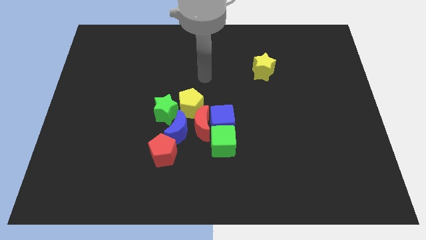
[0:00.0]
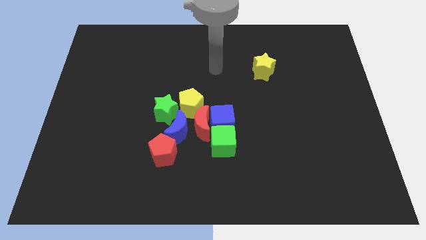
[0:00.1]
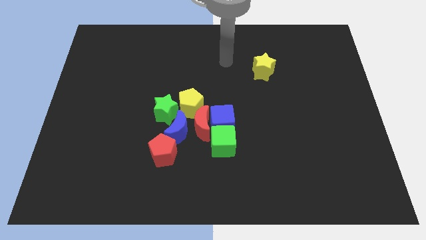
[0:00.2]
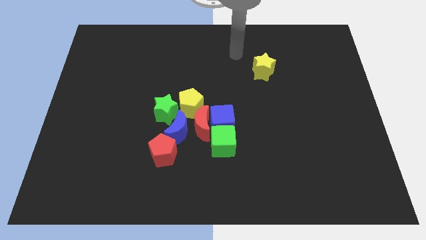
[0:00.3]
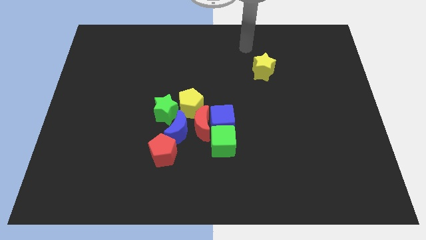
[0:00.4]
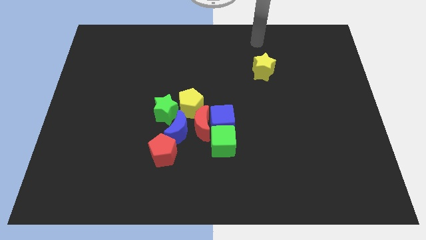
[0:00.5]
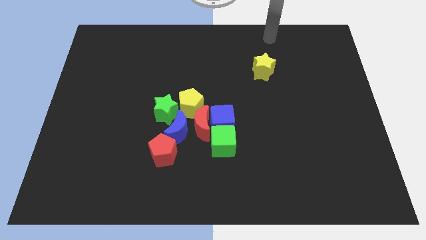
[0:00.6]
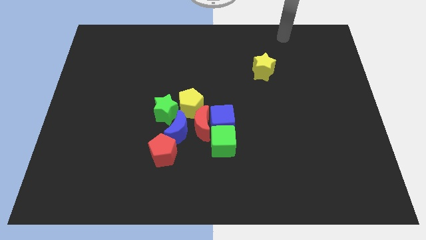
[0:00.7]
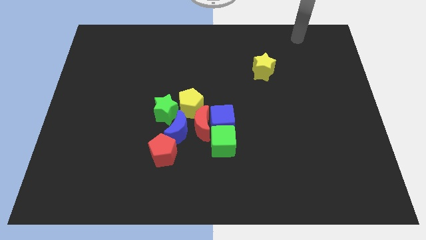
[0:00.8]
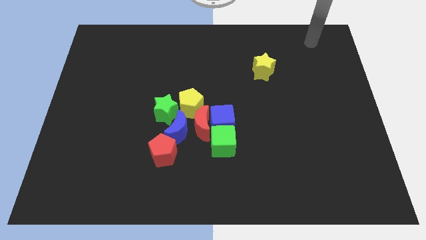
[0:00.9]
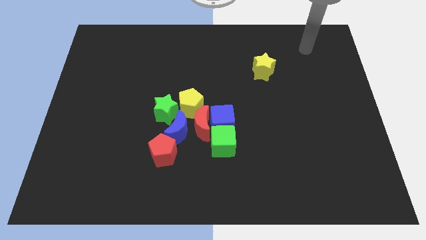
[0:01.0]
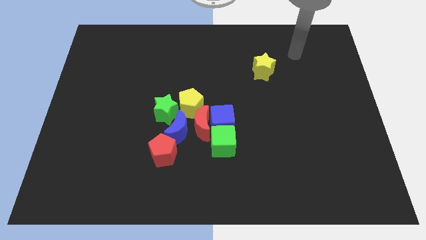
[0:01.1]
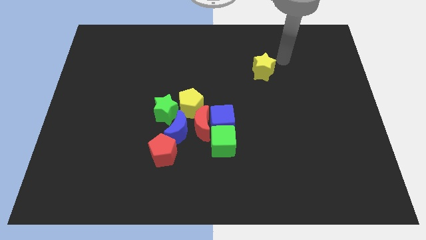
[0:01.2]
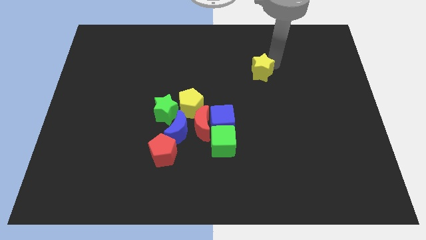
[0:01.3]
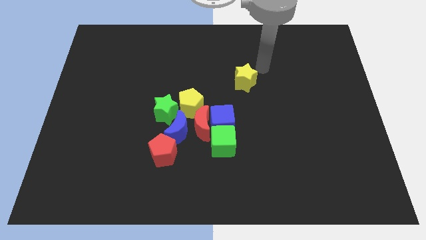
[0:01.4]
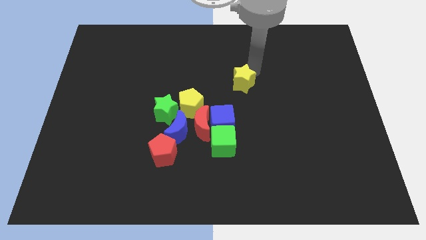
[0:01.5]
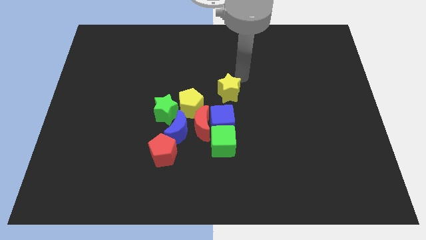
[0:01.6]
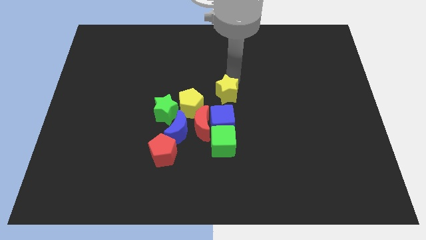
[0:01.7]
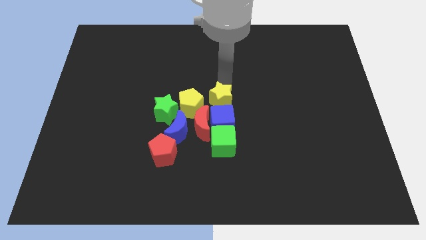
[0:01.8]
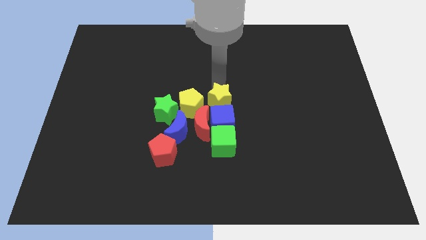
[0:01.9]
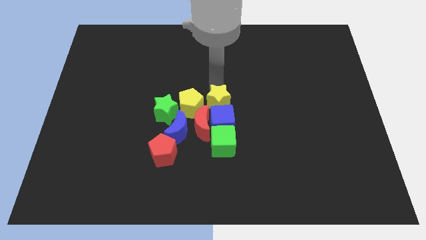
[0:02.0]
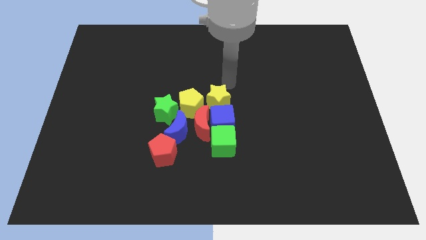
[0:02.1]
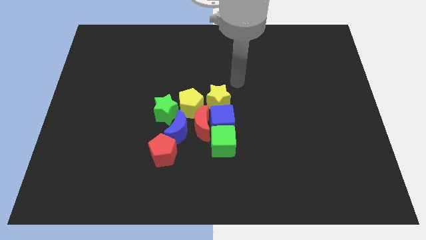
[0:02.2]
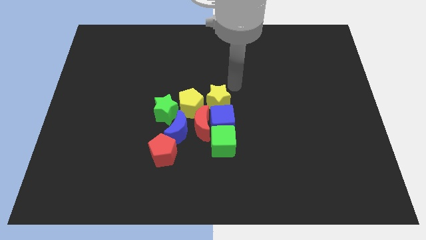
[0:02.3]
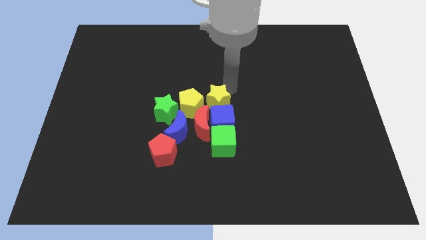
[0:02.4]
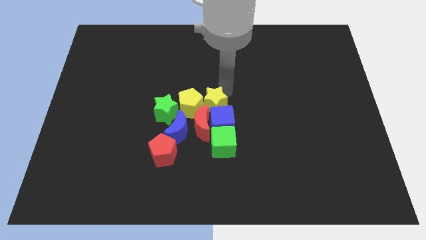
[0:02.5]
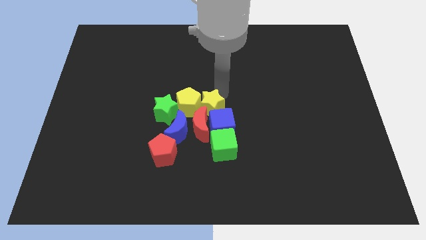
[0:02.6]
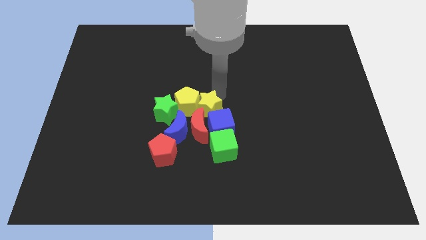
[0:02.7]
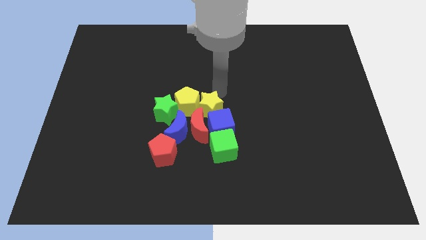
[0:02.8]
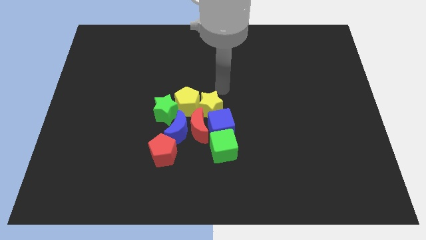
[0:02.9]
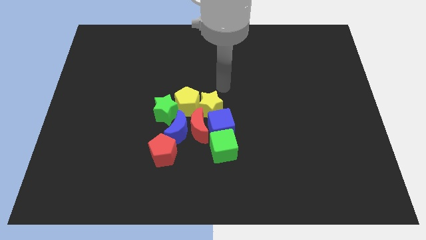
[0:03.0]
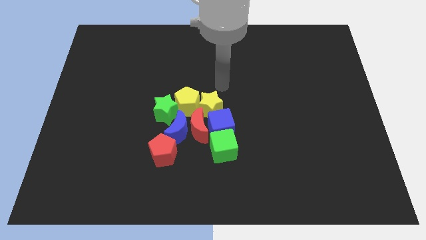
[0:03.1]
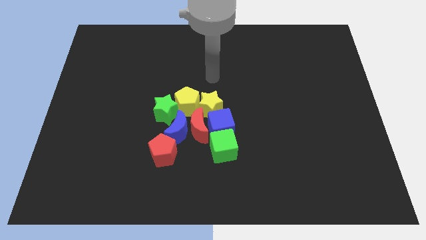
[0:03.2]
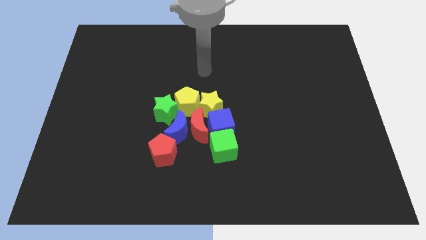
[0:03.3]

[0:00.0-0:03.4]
slide the yellow star to the right side of the yellow pentagon

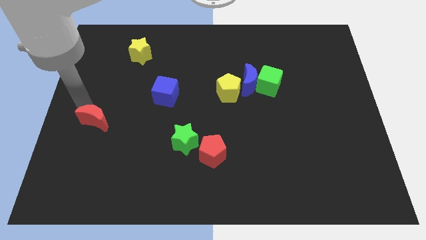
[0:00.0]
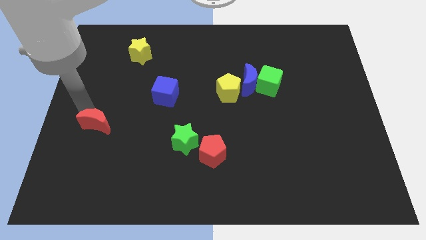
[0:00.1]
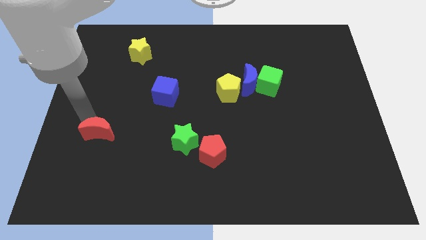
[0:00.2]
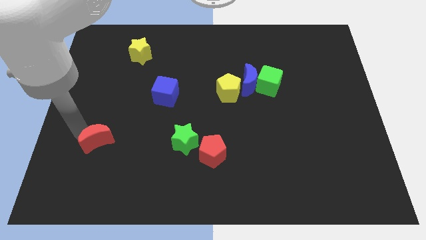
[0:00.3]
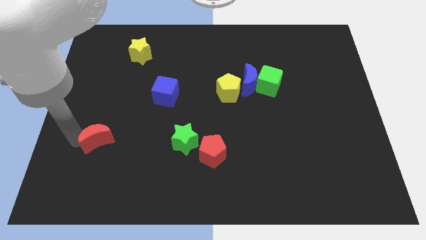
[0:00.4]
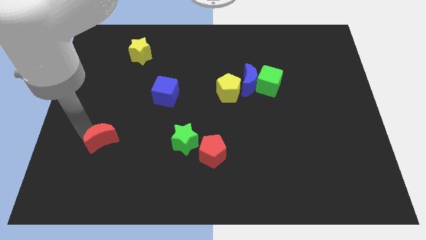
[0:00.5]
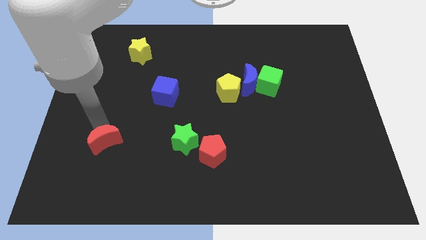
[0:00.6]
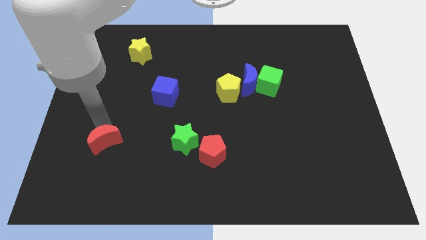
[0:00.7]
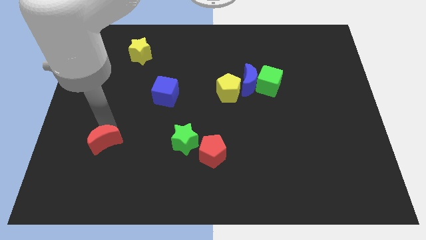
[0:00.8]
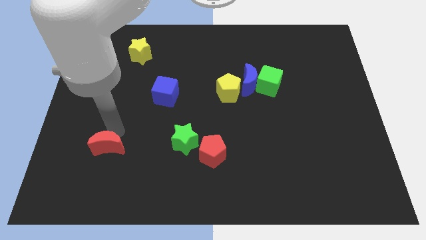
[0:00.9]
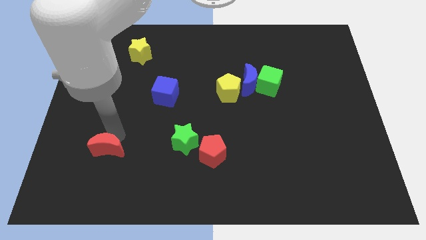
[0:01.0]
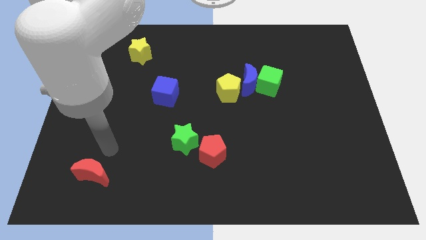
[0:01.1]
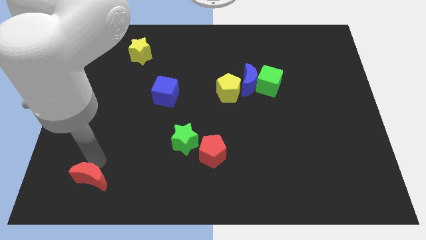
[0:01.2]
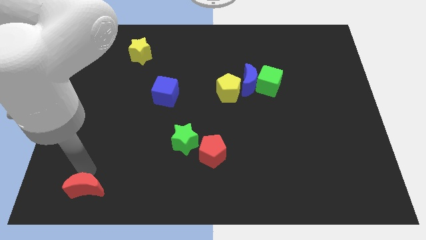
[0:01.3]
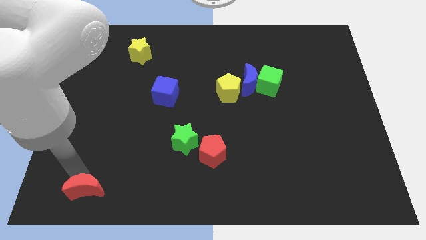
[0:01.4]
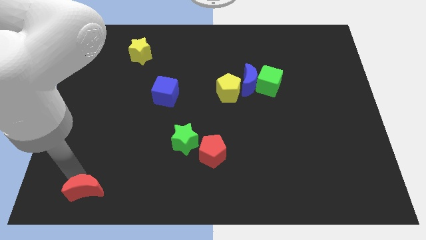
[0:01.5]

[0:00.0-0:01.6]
move the red crescent to the bottom of the board

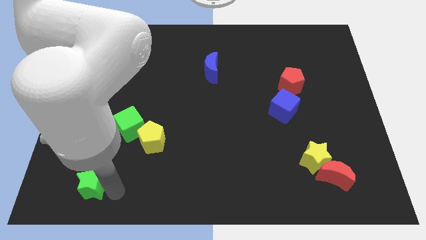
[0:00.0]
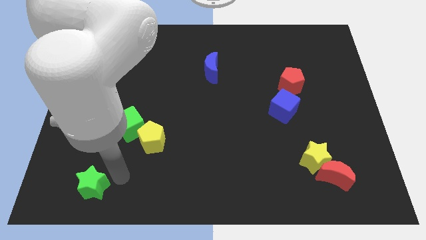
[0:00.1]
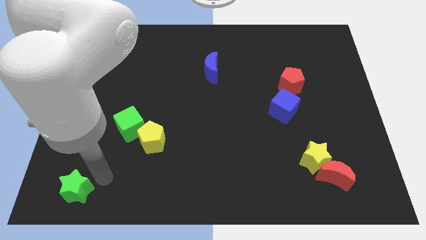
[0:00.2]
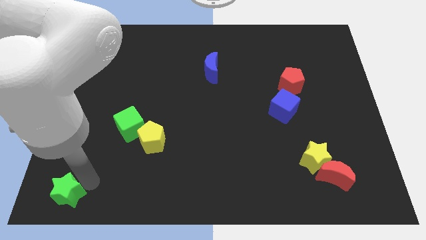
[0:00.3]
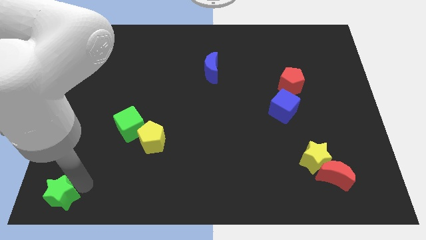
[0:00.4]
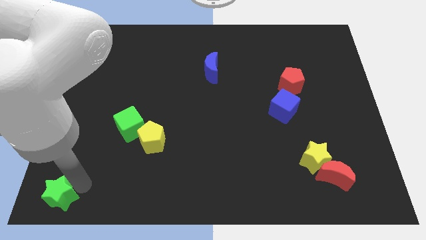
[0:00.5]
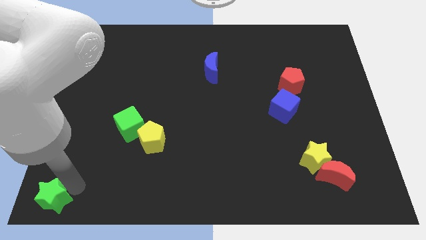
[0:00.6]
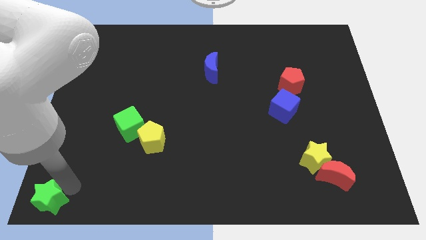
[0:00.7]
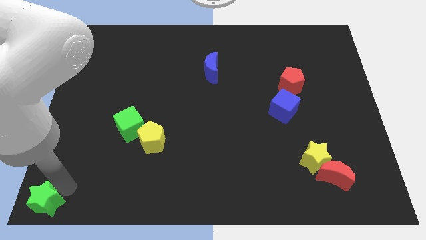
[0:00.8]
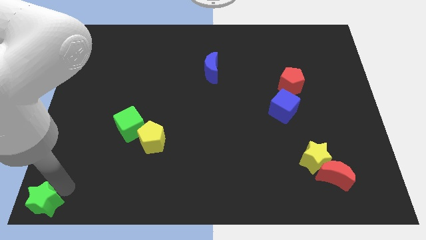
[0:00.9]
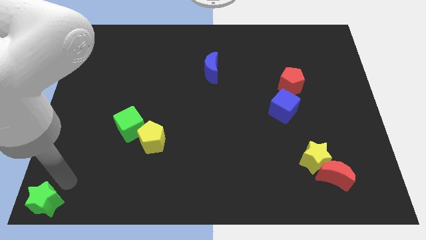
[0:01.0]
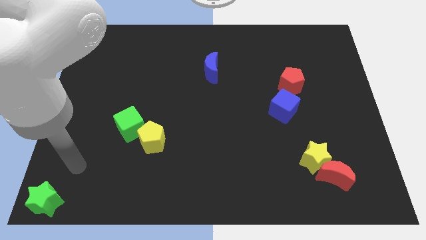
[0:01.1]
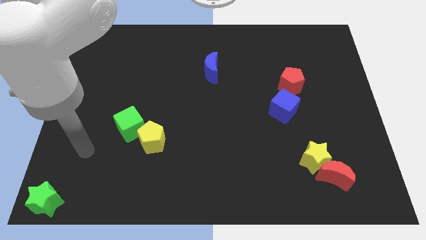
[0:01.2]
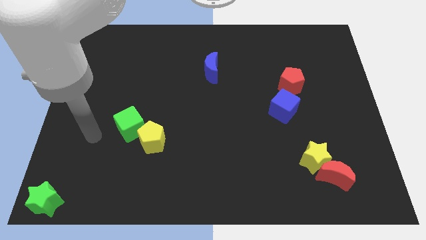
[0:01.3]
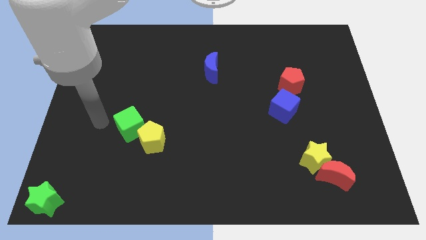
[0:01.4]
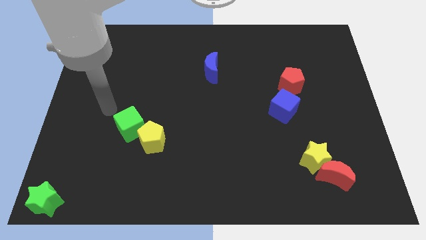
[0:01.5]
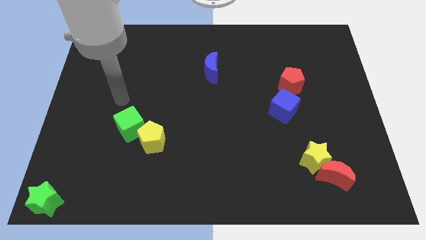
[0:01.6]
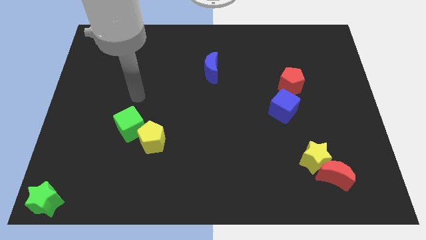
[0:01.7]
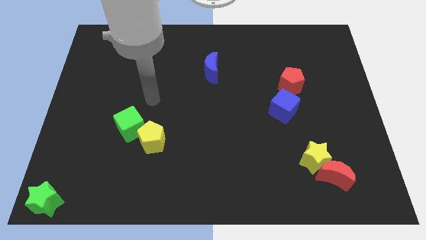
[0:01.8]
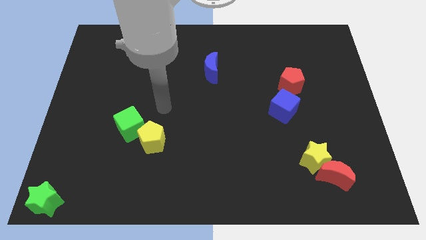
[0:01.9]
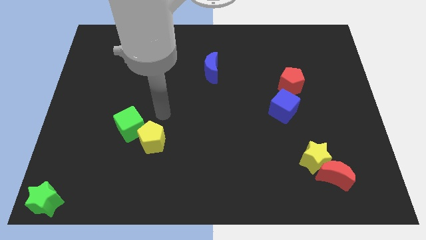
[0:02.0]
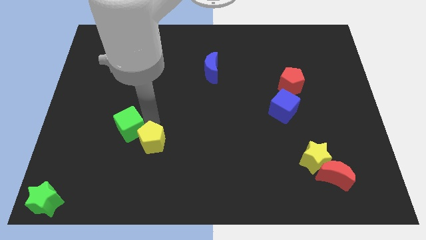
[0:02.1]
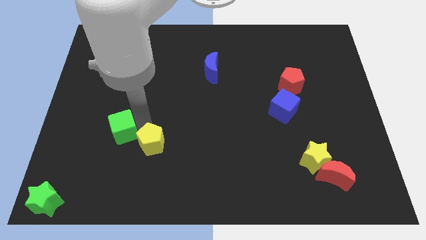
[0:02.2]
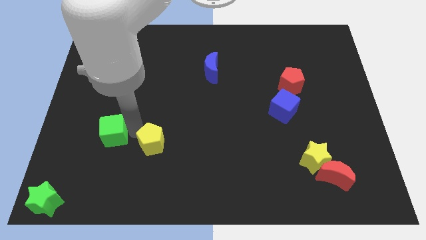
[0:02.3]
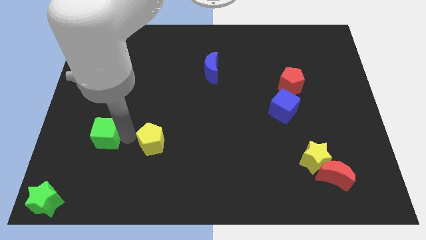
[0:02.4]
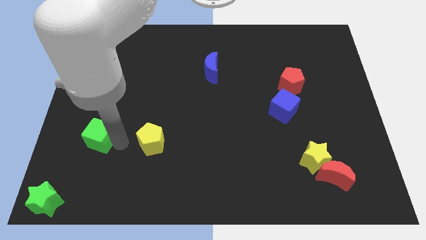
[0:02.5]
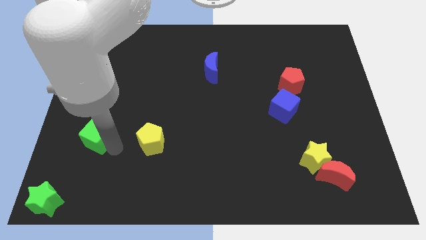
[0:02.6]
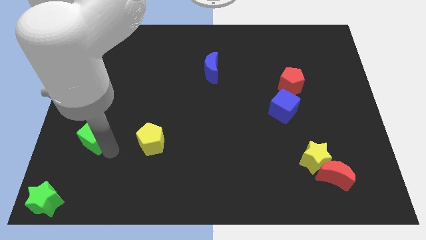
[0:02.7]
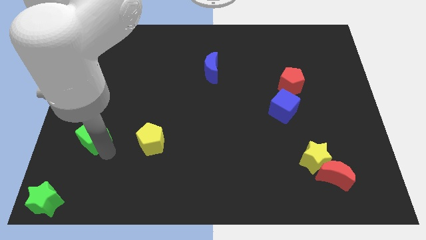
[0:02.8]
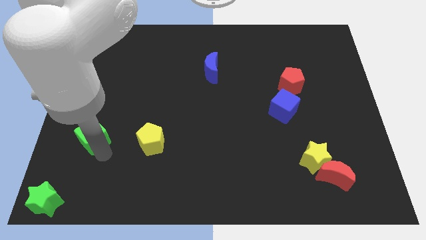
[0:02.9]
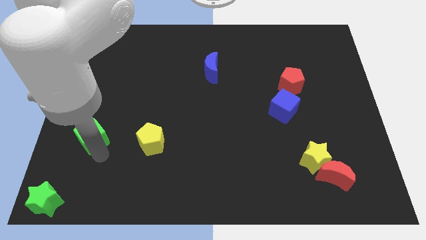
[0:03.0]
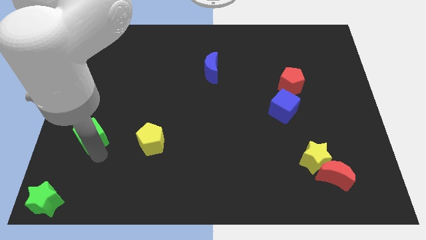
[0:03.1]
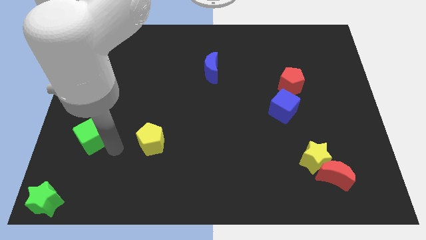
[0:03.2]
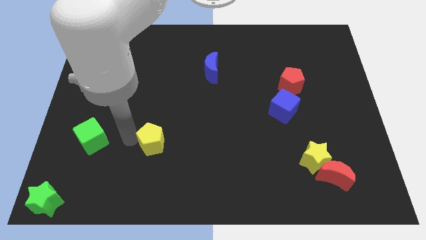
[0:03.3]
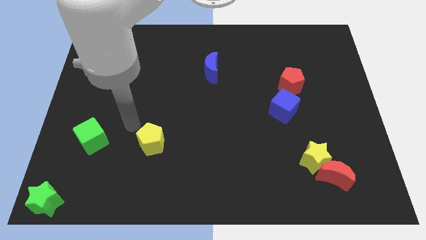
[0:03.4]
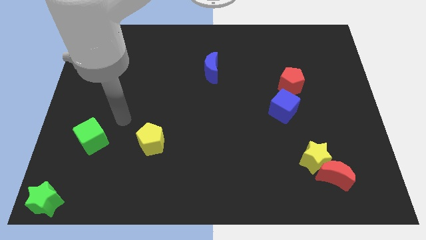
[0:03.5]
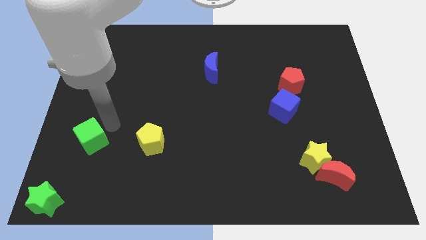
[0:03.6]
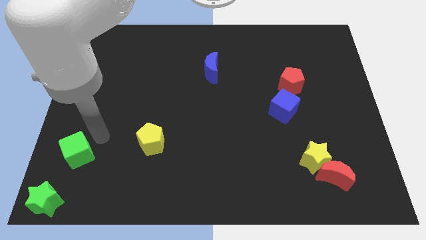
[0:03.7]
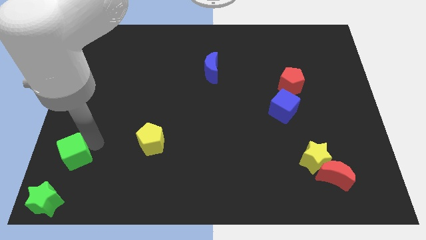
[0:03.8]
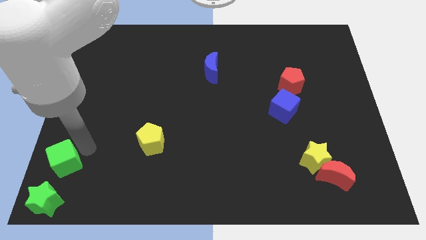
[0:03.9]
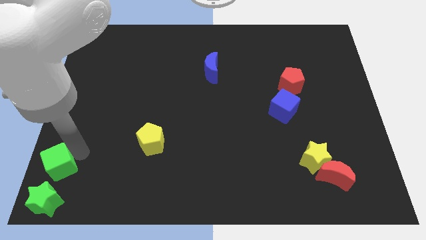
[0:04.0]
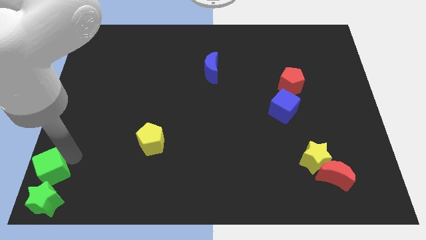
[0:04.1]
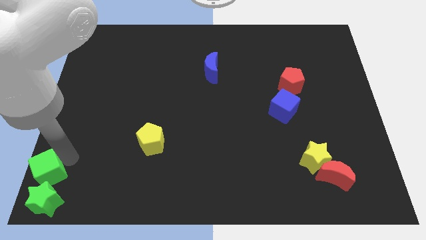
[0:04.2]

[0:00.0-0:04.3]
push the green cube towards the green star
